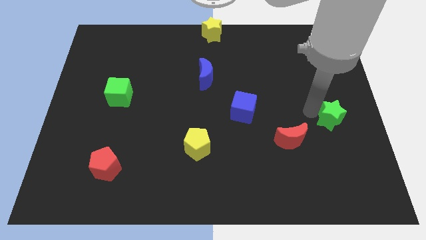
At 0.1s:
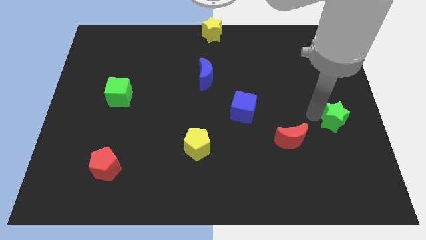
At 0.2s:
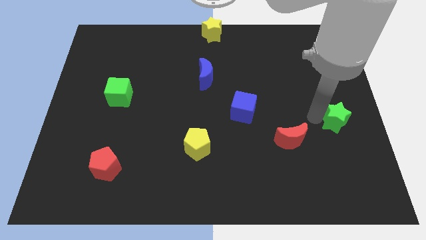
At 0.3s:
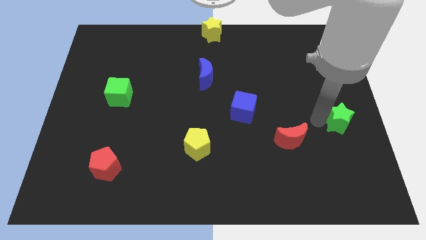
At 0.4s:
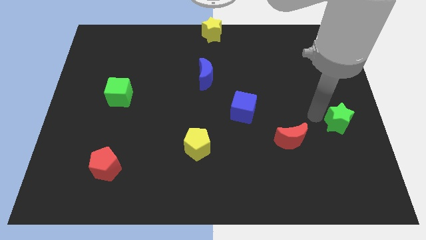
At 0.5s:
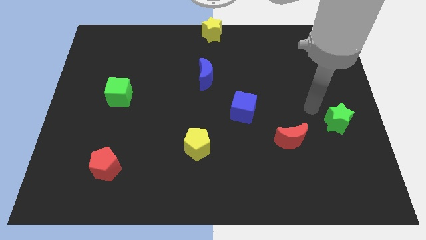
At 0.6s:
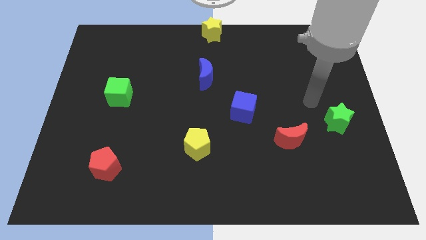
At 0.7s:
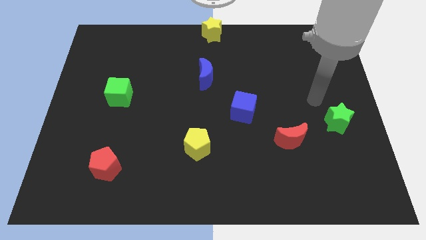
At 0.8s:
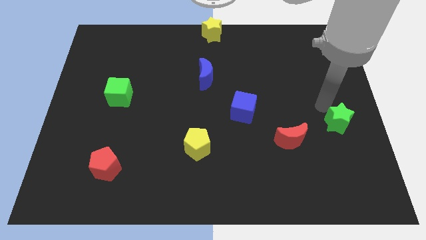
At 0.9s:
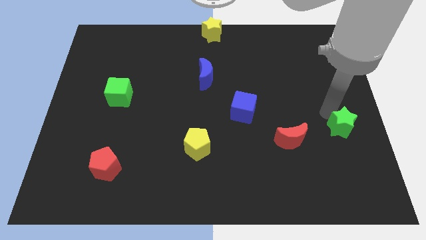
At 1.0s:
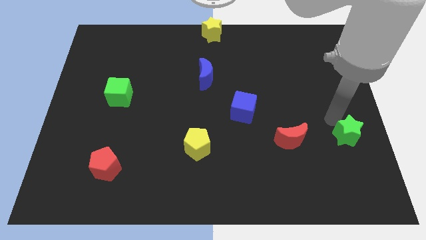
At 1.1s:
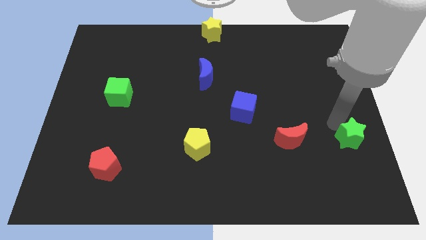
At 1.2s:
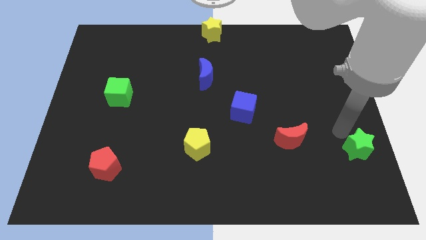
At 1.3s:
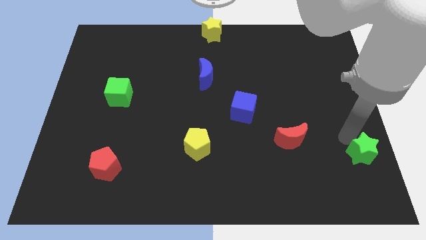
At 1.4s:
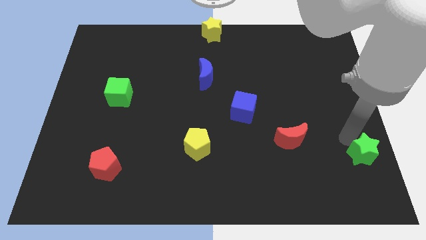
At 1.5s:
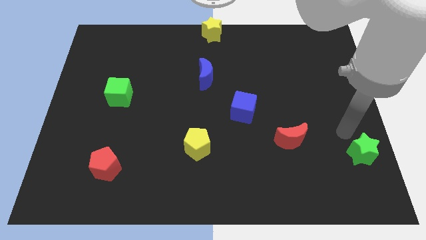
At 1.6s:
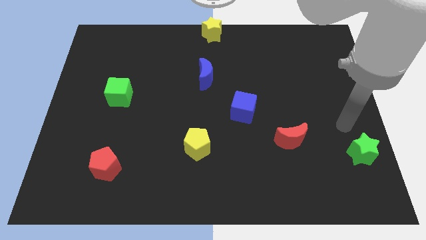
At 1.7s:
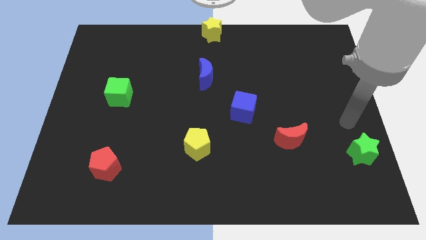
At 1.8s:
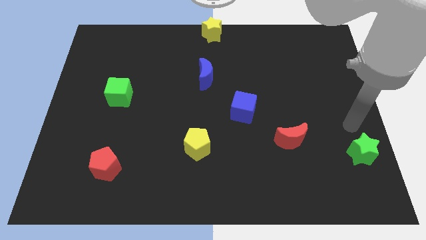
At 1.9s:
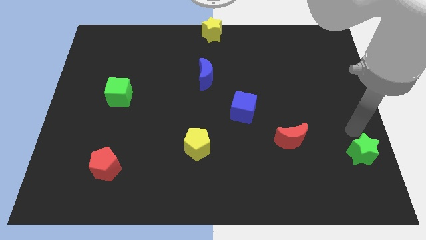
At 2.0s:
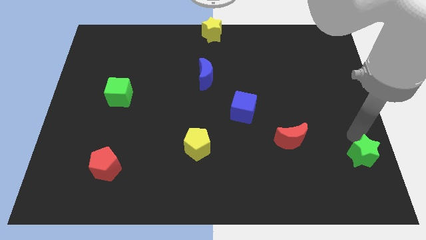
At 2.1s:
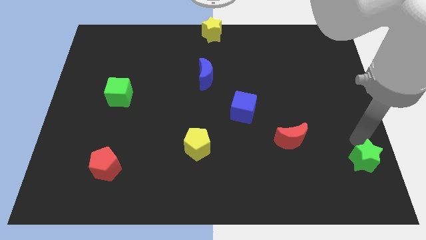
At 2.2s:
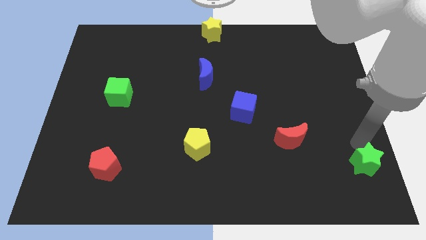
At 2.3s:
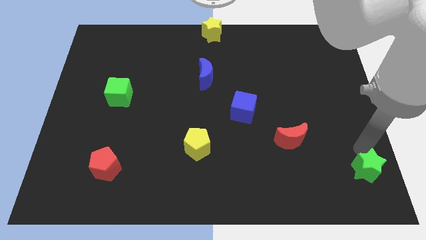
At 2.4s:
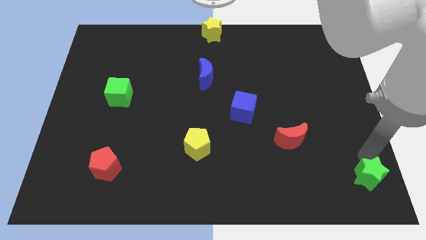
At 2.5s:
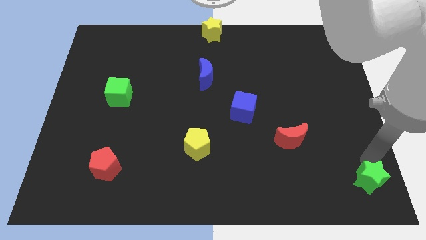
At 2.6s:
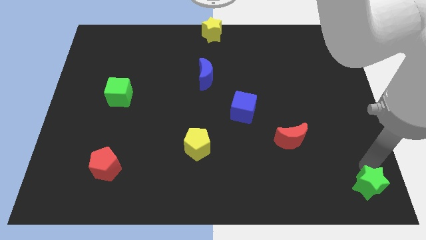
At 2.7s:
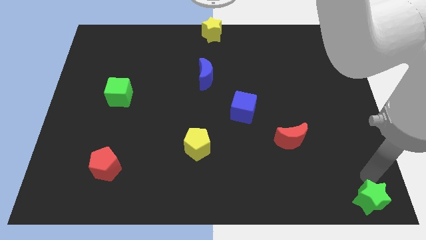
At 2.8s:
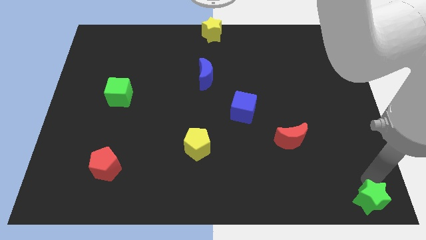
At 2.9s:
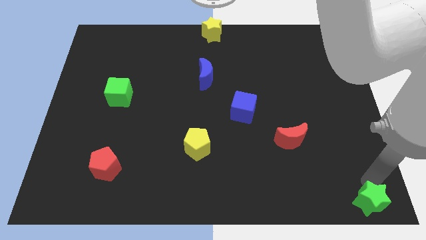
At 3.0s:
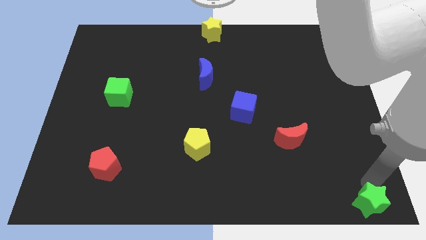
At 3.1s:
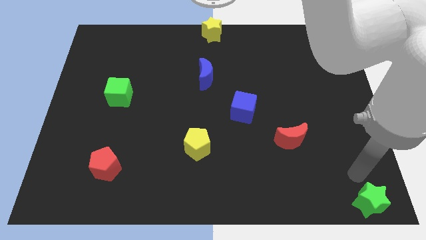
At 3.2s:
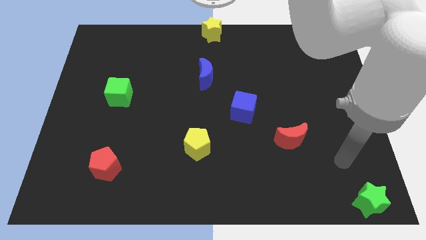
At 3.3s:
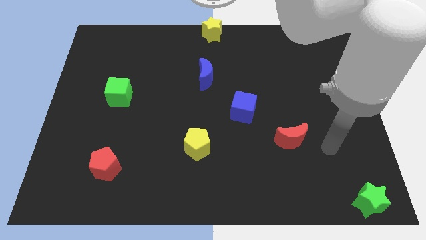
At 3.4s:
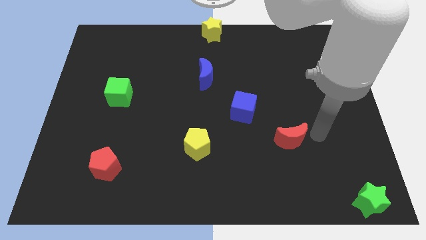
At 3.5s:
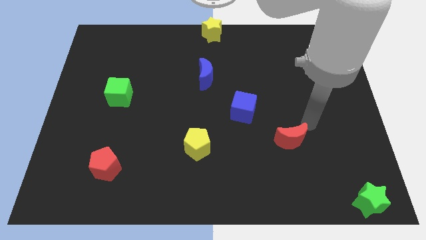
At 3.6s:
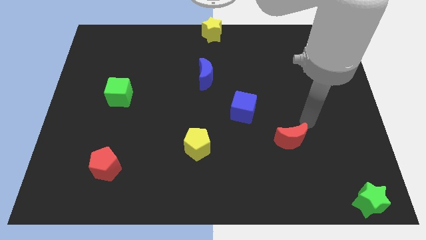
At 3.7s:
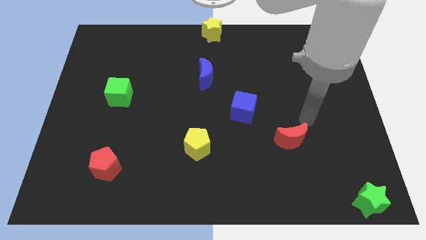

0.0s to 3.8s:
move the green star to the bottom right

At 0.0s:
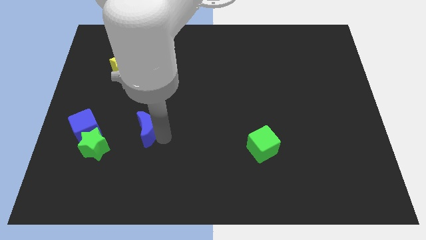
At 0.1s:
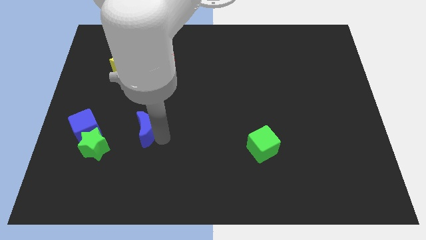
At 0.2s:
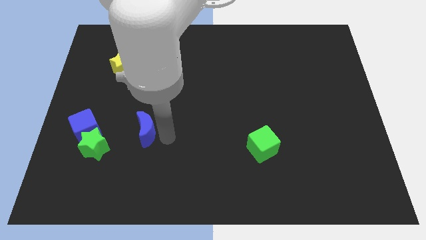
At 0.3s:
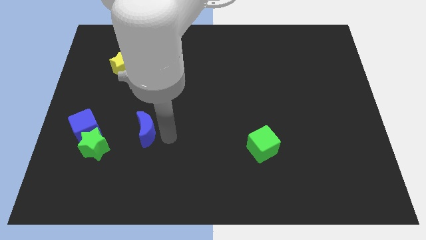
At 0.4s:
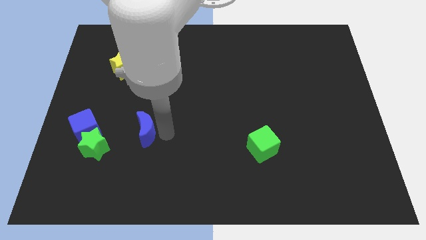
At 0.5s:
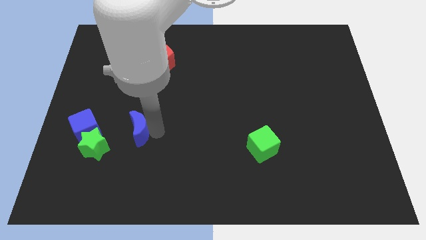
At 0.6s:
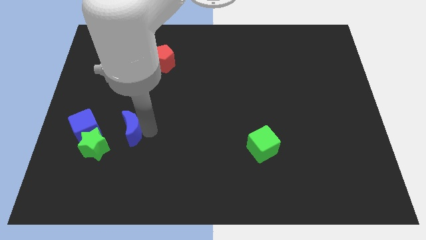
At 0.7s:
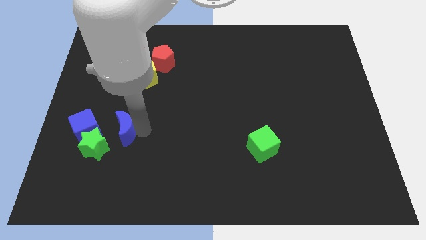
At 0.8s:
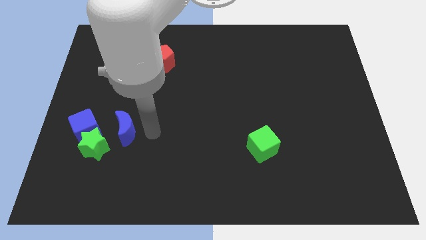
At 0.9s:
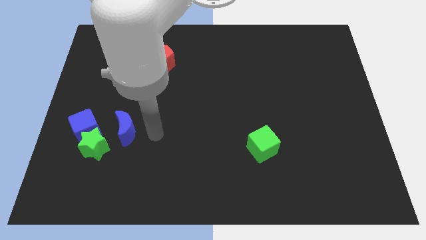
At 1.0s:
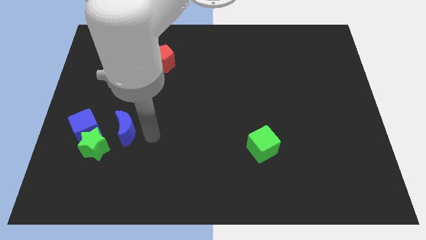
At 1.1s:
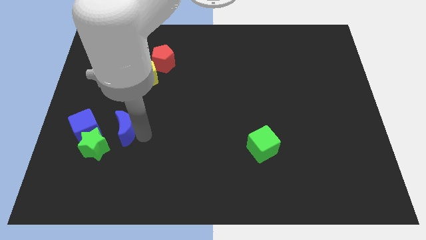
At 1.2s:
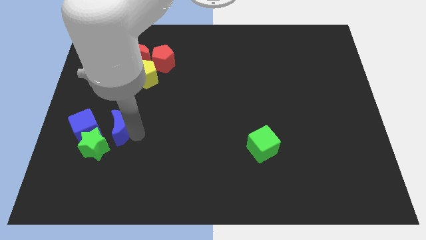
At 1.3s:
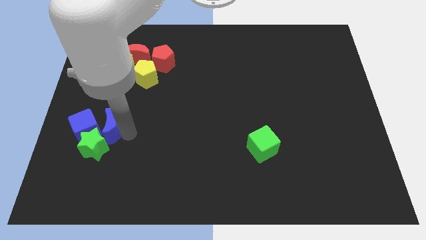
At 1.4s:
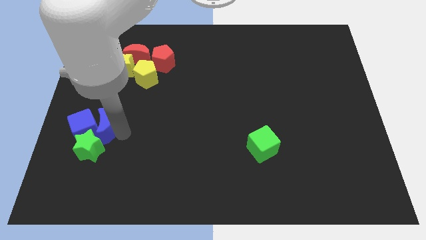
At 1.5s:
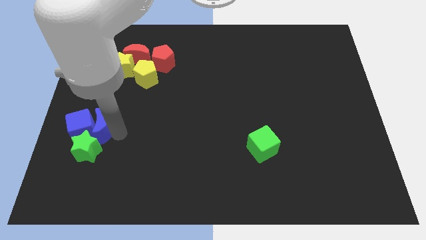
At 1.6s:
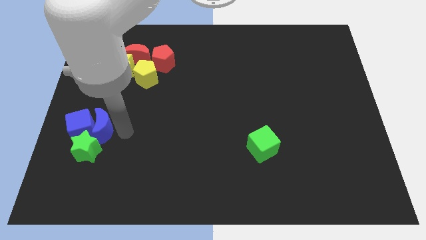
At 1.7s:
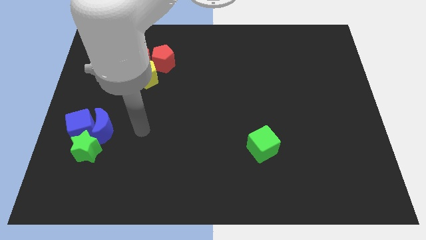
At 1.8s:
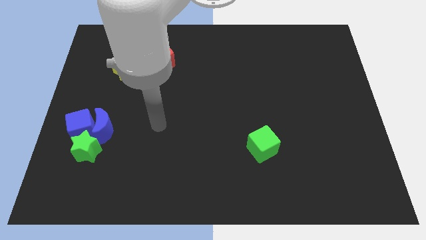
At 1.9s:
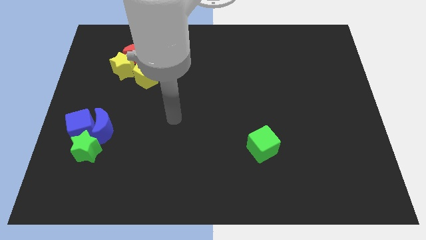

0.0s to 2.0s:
move the blue moon into the blue cube

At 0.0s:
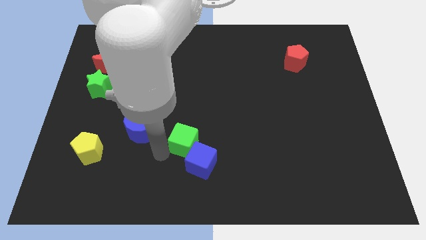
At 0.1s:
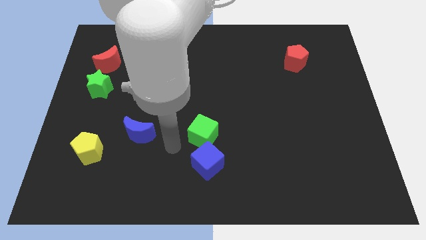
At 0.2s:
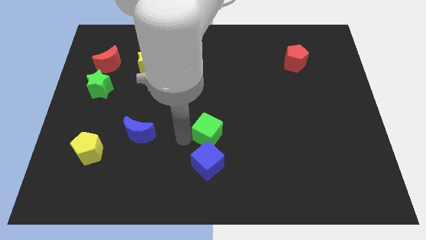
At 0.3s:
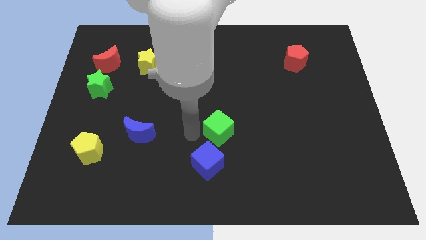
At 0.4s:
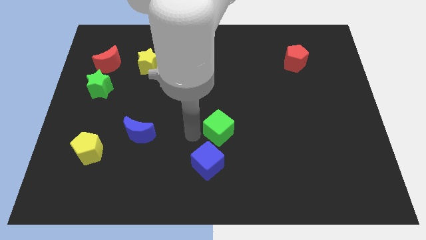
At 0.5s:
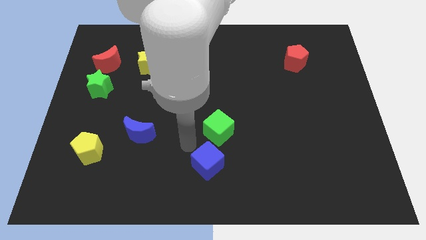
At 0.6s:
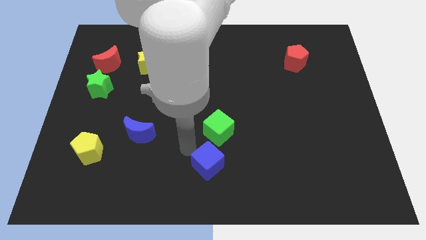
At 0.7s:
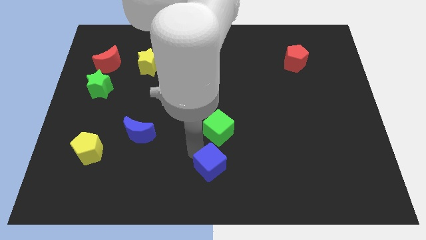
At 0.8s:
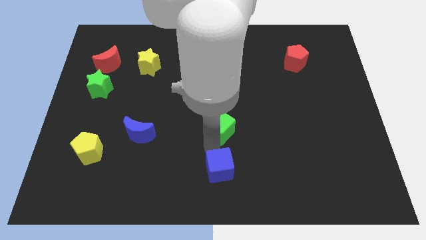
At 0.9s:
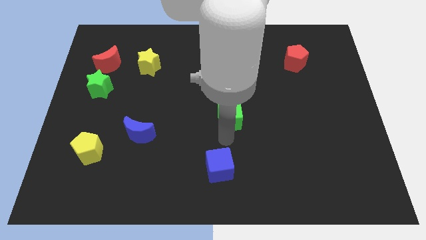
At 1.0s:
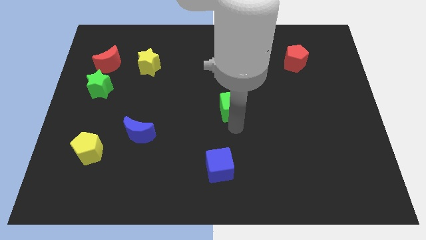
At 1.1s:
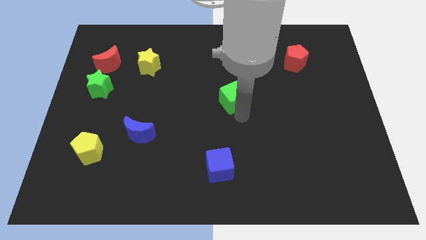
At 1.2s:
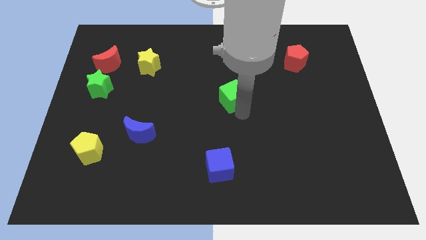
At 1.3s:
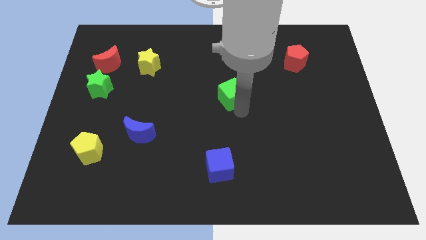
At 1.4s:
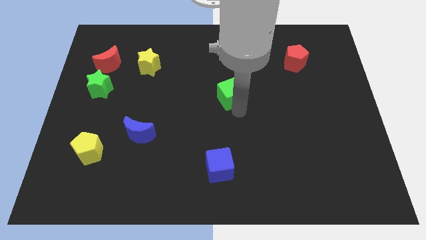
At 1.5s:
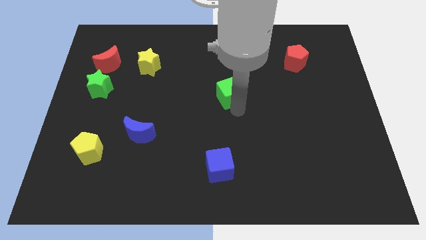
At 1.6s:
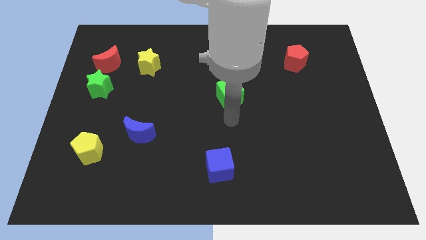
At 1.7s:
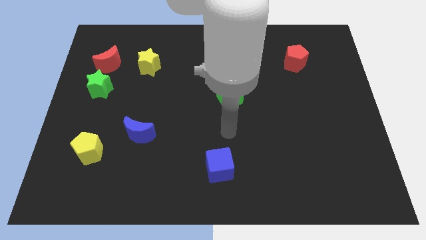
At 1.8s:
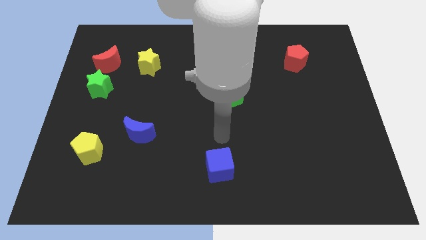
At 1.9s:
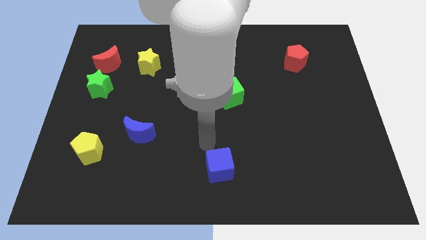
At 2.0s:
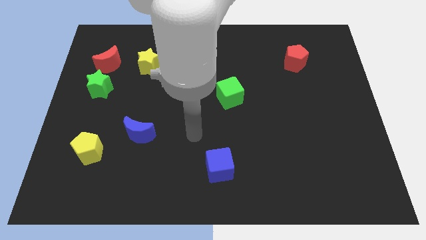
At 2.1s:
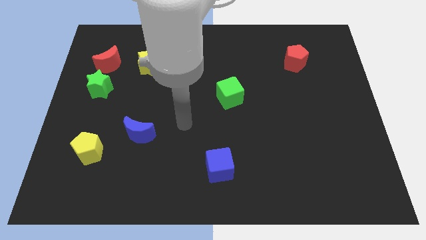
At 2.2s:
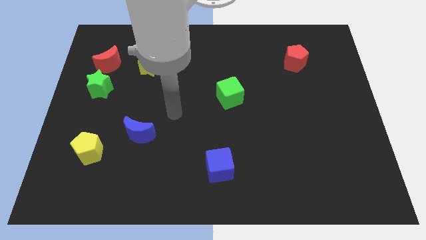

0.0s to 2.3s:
move the green cube to the center of the board

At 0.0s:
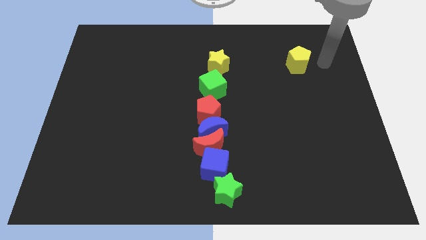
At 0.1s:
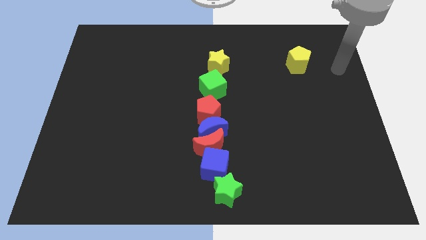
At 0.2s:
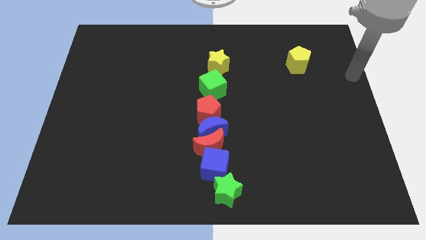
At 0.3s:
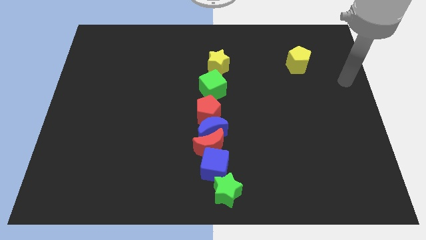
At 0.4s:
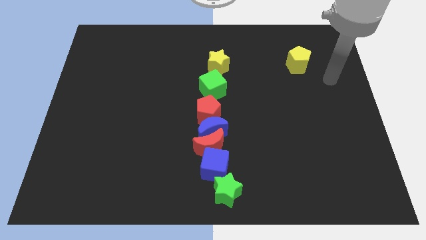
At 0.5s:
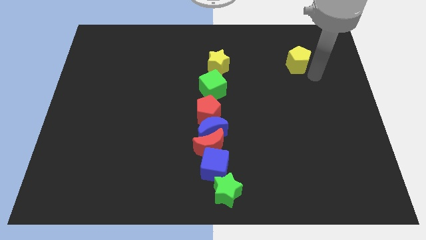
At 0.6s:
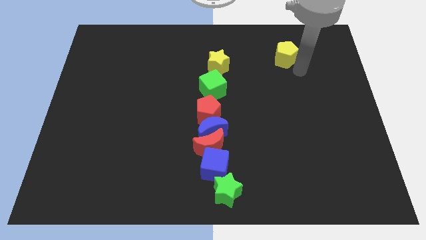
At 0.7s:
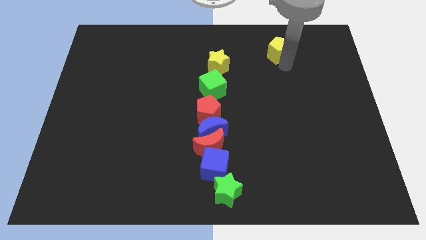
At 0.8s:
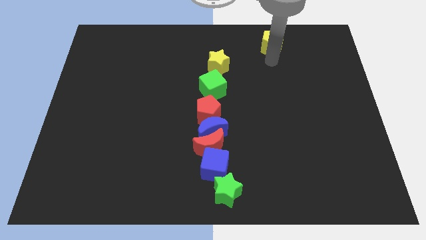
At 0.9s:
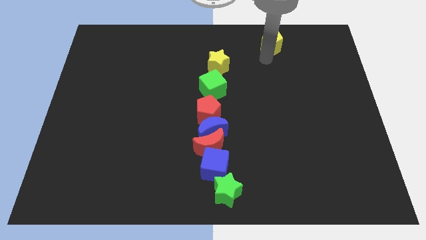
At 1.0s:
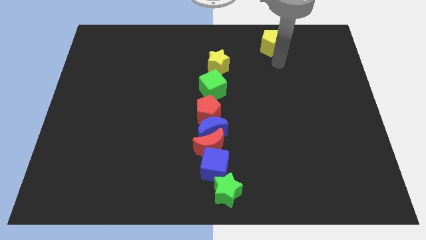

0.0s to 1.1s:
move the yellow pentagon diagonally to the top right of yellow star

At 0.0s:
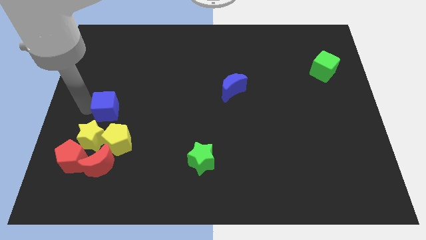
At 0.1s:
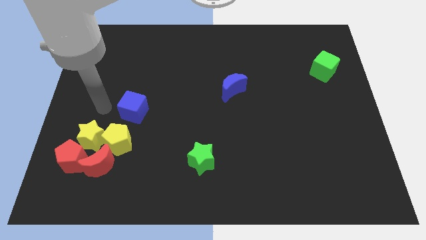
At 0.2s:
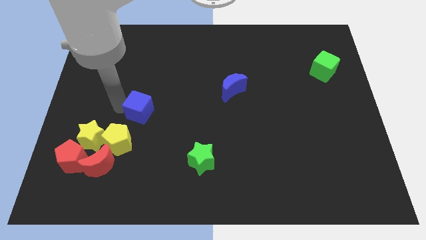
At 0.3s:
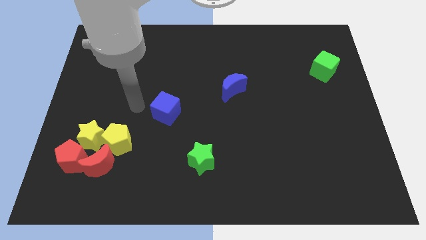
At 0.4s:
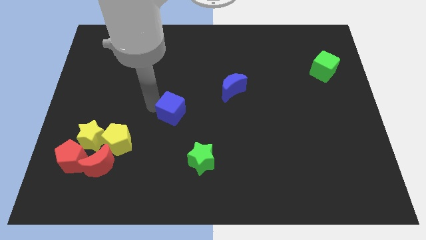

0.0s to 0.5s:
move the blue cube to the right of the board
